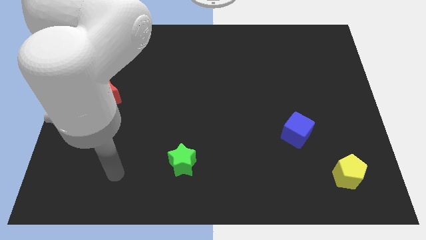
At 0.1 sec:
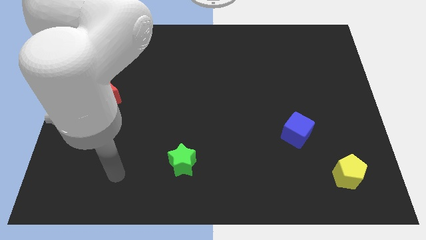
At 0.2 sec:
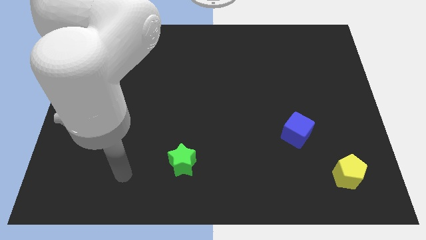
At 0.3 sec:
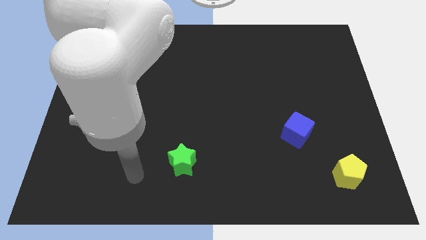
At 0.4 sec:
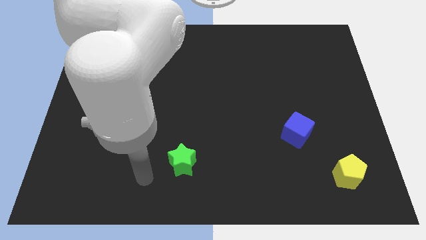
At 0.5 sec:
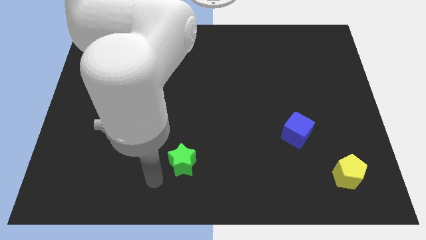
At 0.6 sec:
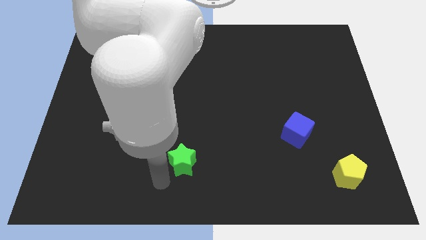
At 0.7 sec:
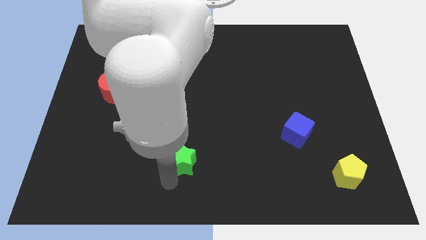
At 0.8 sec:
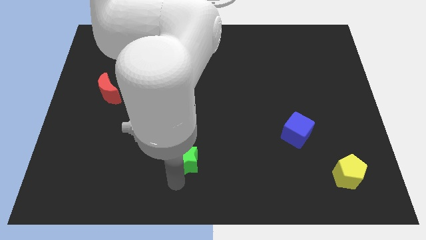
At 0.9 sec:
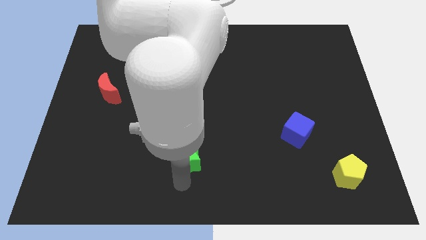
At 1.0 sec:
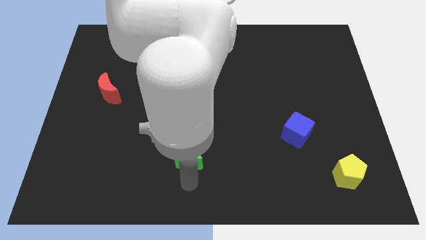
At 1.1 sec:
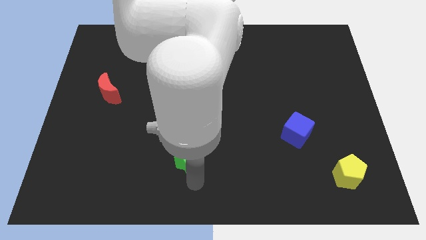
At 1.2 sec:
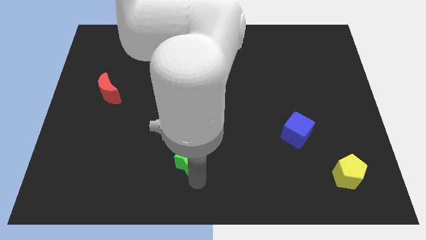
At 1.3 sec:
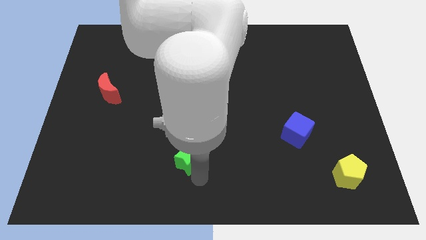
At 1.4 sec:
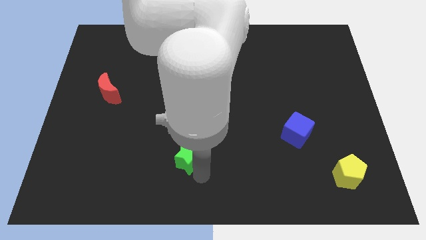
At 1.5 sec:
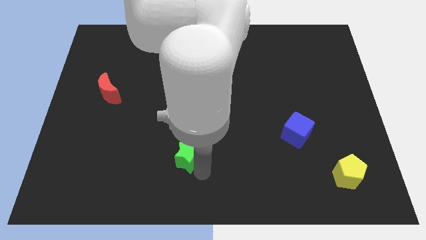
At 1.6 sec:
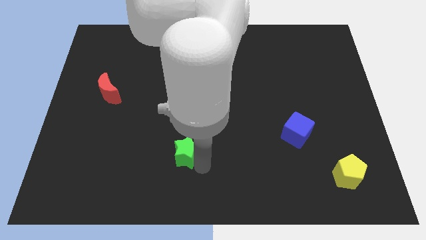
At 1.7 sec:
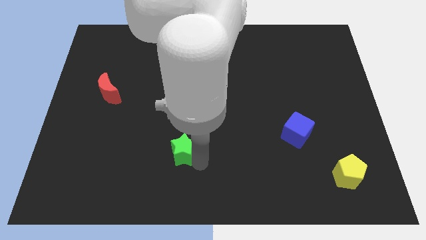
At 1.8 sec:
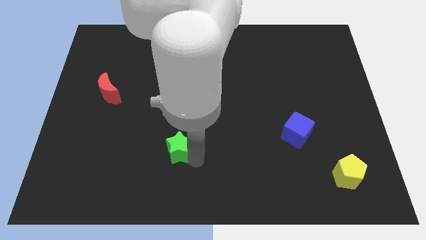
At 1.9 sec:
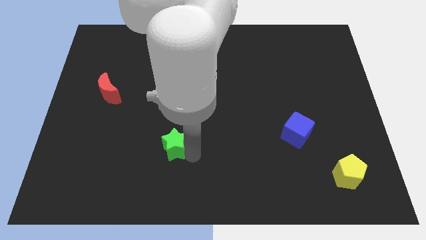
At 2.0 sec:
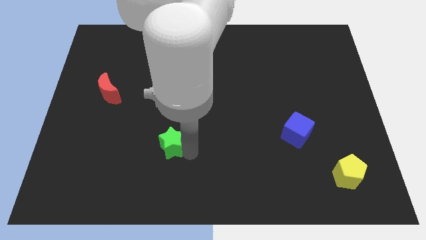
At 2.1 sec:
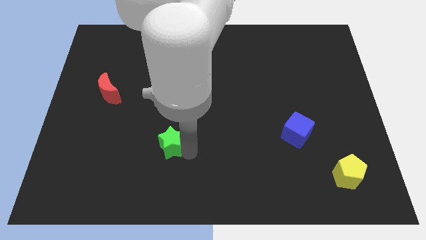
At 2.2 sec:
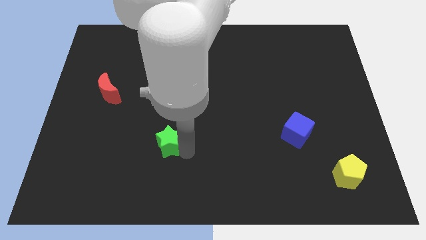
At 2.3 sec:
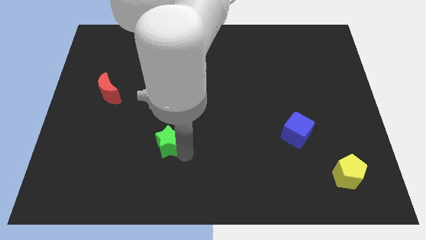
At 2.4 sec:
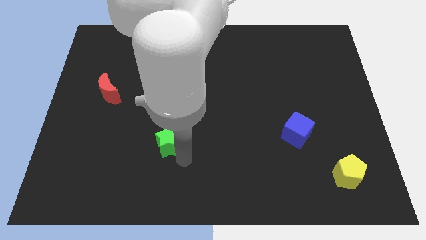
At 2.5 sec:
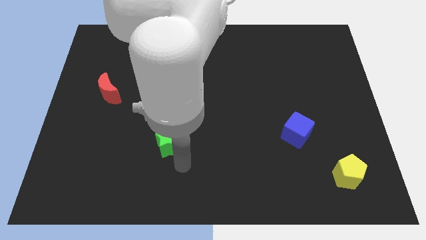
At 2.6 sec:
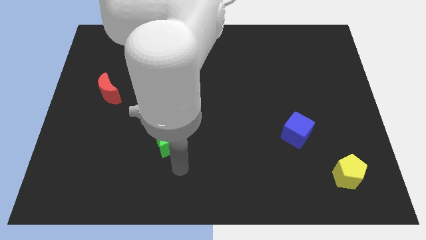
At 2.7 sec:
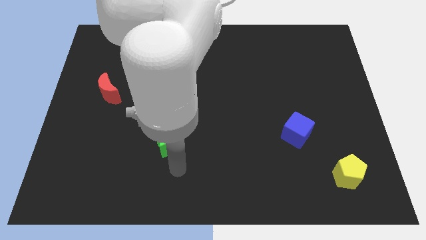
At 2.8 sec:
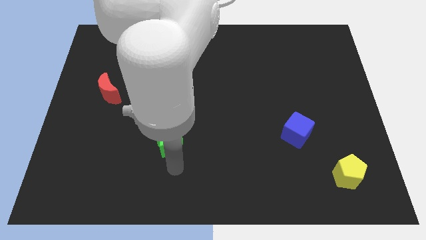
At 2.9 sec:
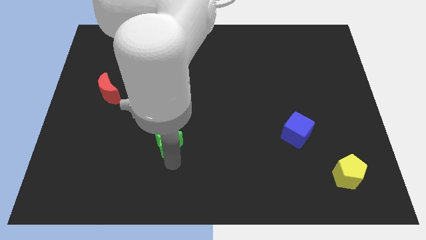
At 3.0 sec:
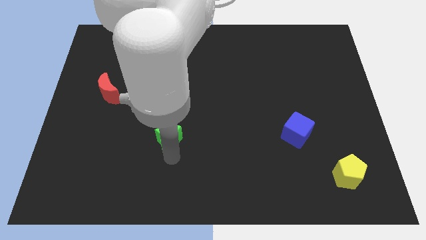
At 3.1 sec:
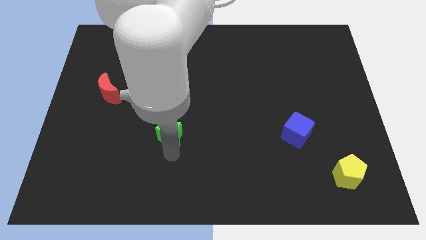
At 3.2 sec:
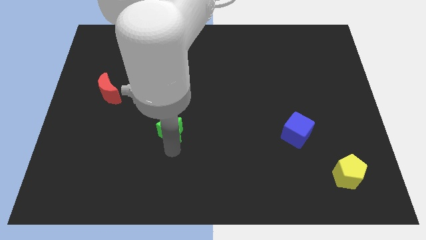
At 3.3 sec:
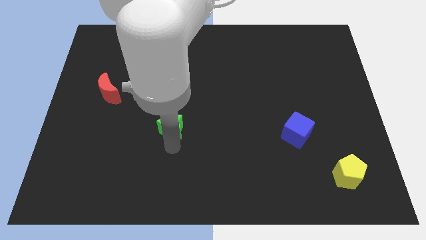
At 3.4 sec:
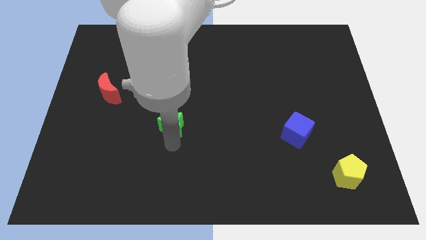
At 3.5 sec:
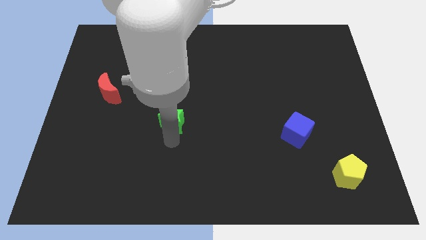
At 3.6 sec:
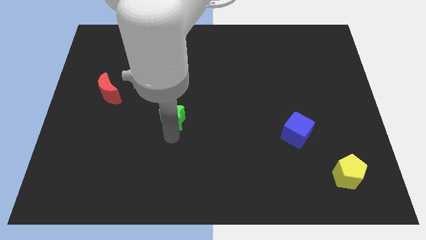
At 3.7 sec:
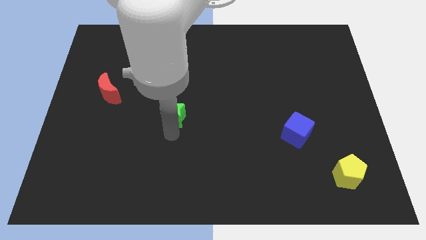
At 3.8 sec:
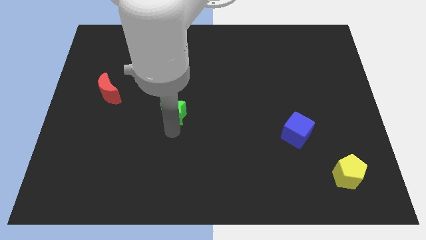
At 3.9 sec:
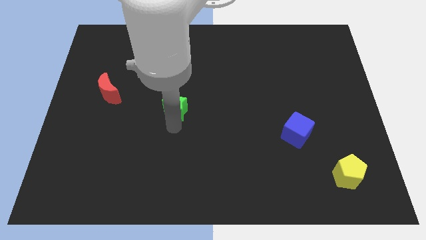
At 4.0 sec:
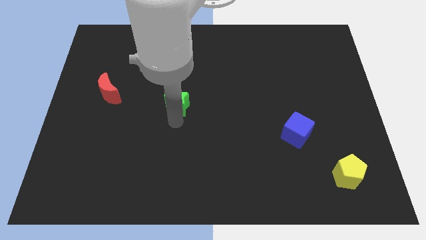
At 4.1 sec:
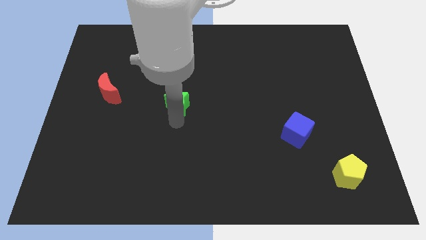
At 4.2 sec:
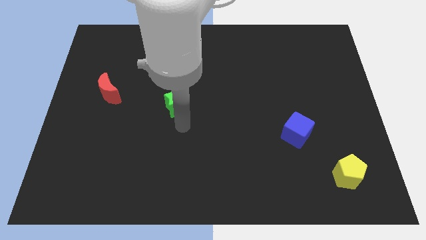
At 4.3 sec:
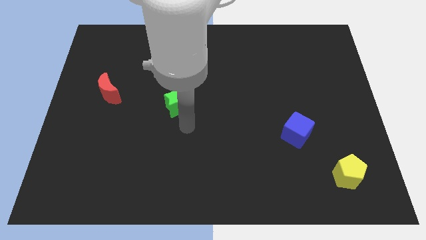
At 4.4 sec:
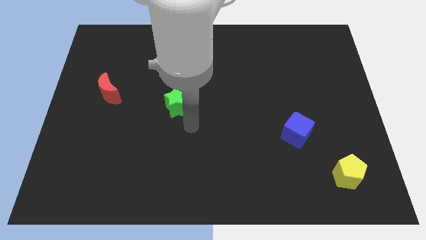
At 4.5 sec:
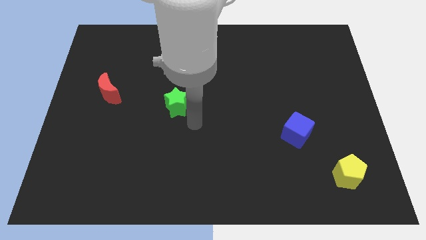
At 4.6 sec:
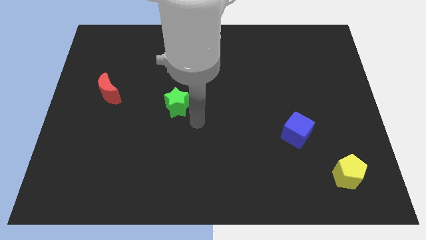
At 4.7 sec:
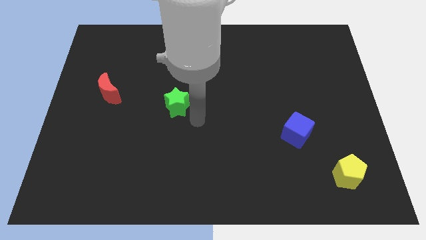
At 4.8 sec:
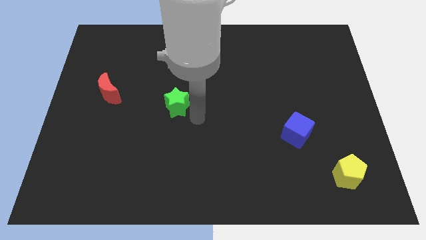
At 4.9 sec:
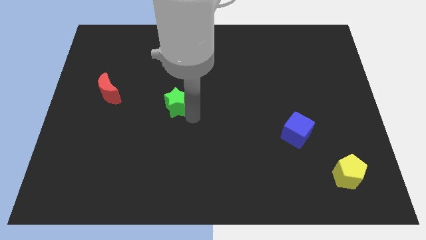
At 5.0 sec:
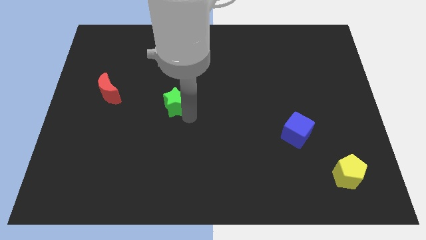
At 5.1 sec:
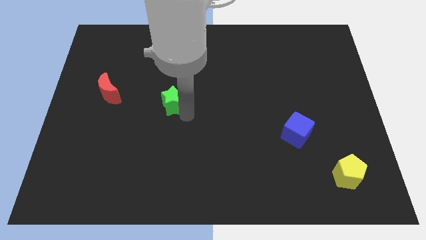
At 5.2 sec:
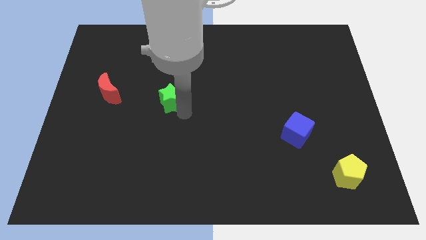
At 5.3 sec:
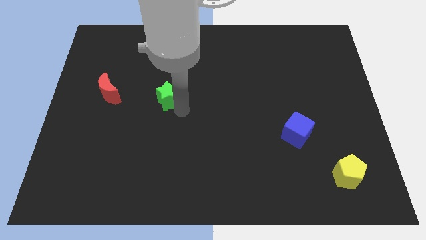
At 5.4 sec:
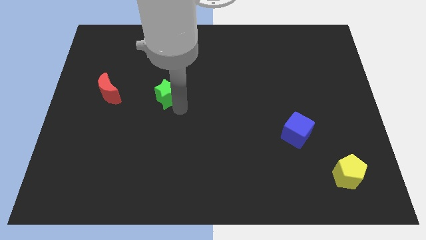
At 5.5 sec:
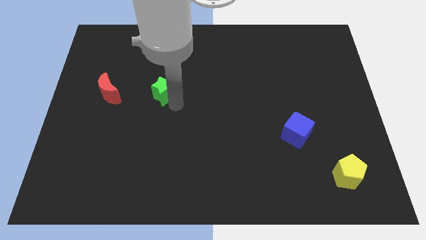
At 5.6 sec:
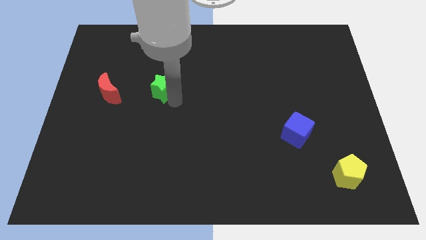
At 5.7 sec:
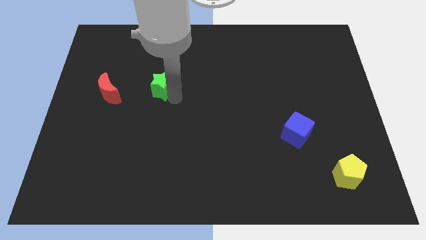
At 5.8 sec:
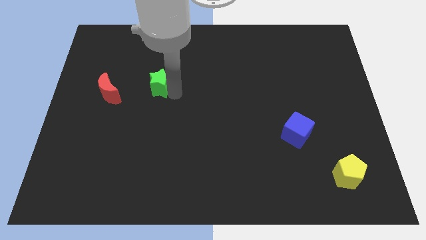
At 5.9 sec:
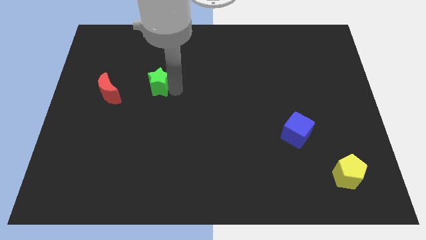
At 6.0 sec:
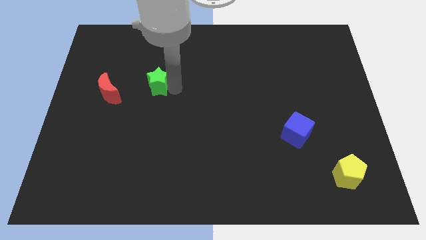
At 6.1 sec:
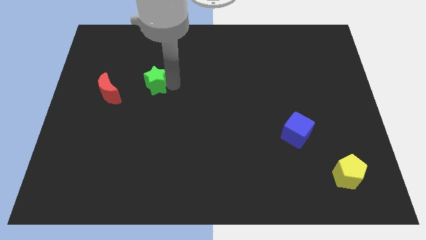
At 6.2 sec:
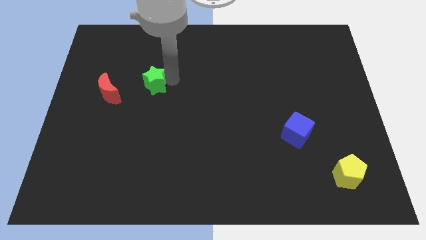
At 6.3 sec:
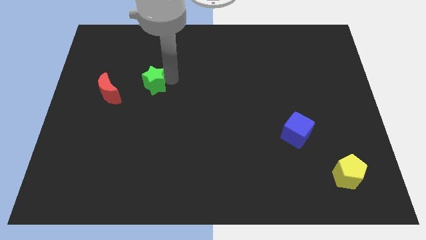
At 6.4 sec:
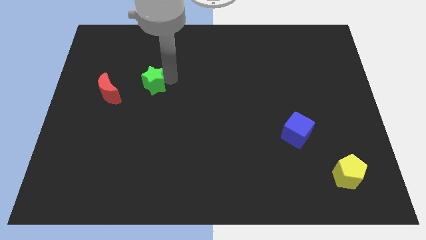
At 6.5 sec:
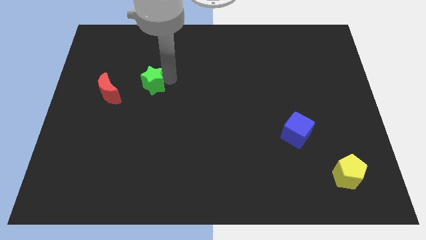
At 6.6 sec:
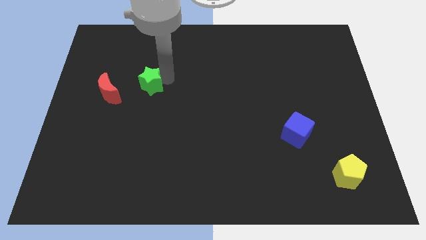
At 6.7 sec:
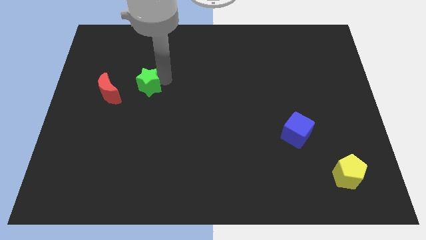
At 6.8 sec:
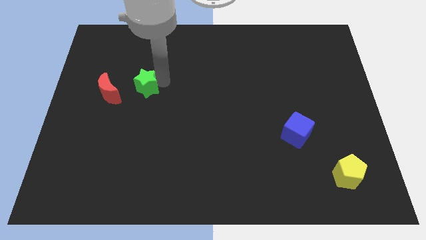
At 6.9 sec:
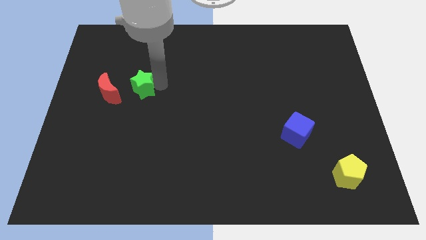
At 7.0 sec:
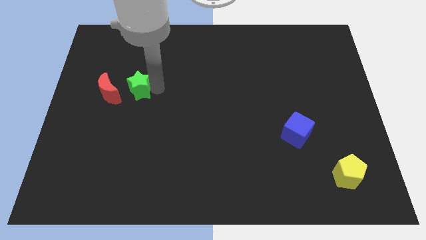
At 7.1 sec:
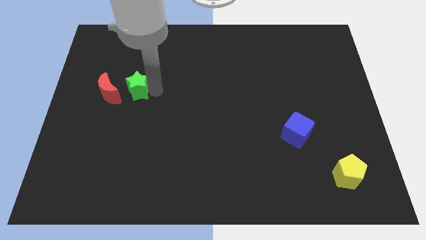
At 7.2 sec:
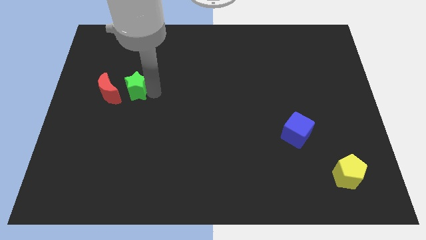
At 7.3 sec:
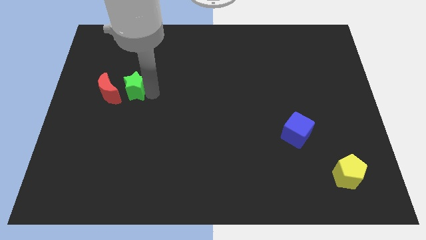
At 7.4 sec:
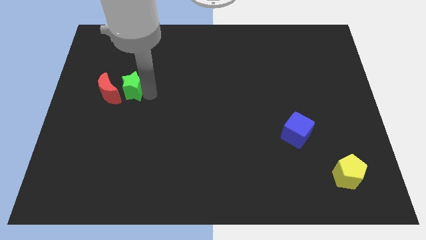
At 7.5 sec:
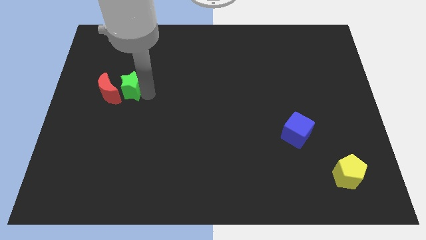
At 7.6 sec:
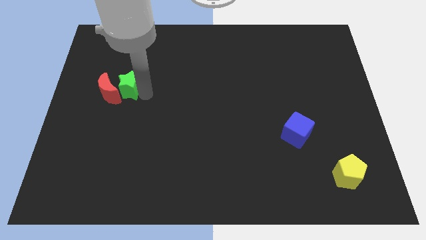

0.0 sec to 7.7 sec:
slide the green star to the red block

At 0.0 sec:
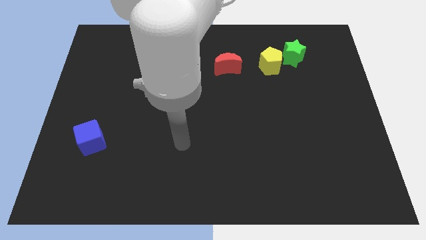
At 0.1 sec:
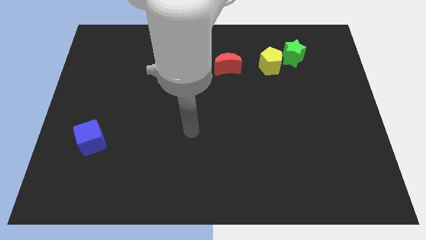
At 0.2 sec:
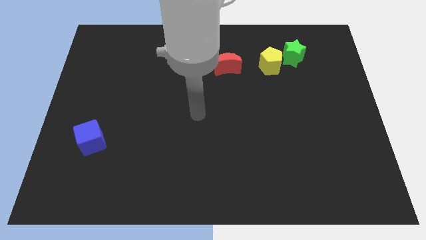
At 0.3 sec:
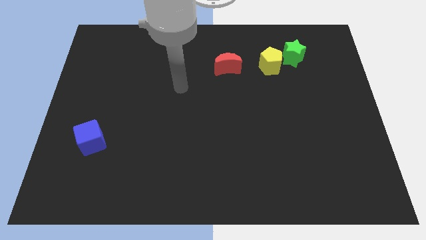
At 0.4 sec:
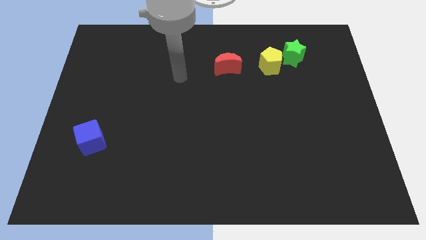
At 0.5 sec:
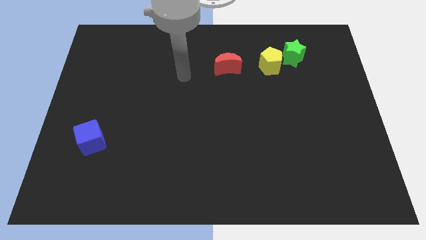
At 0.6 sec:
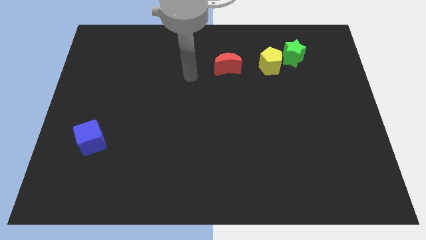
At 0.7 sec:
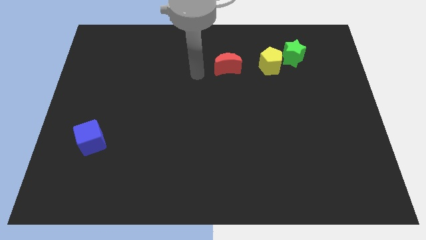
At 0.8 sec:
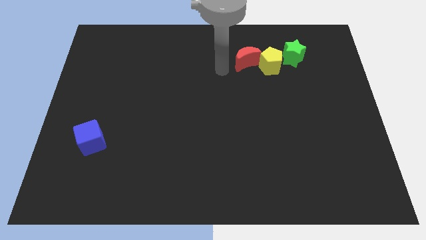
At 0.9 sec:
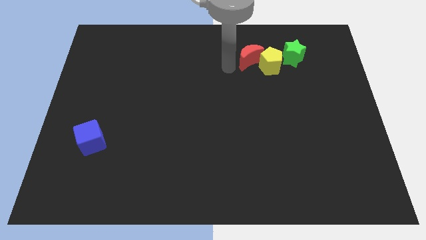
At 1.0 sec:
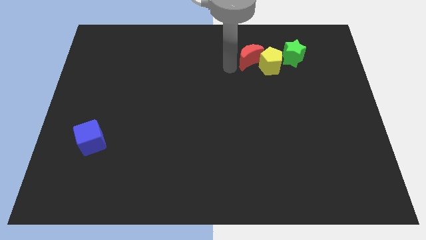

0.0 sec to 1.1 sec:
slide the moon next to the pentagon
